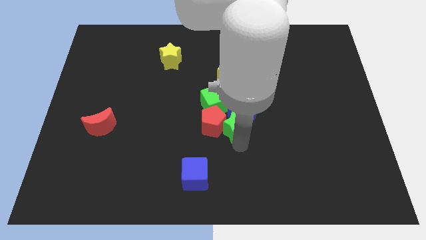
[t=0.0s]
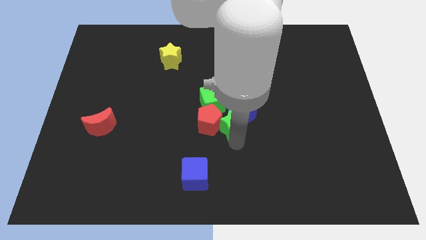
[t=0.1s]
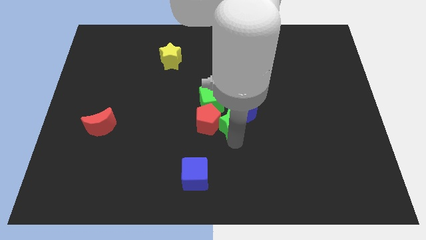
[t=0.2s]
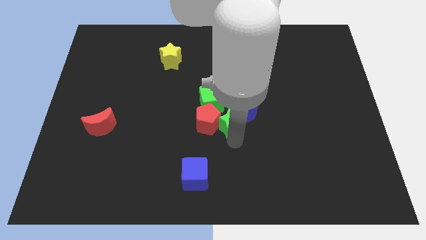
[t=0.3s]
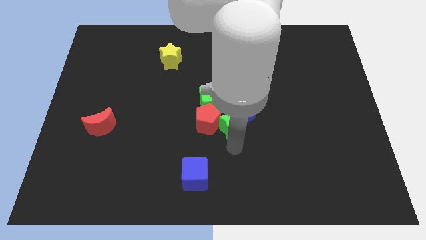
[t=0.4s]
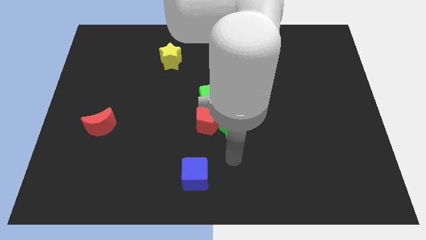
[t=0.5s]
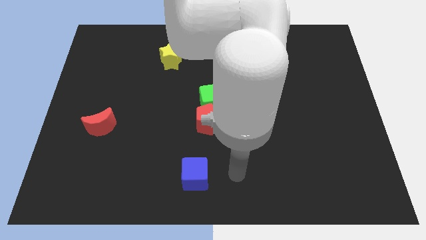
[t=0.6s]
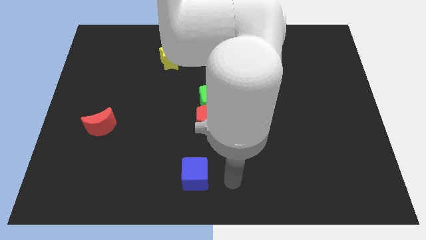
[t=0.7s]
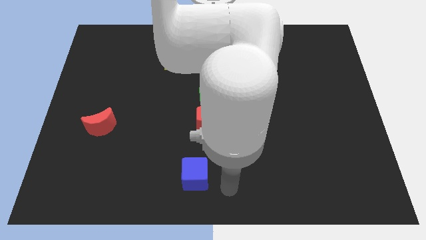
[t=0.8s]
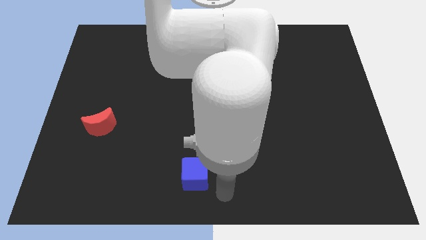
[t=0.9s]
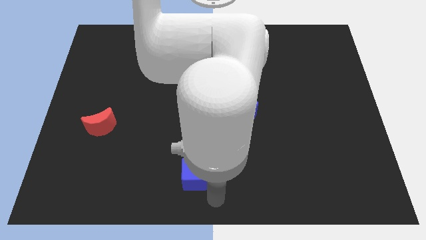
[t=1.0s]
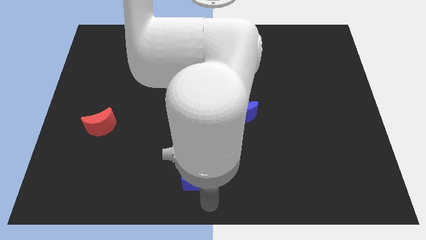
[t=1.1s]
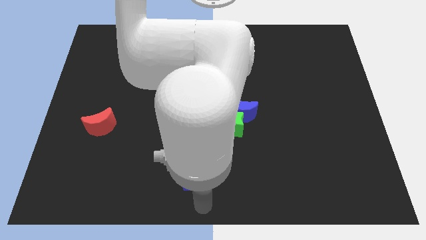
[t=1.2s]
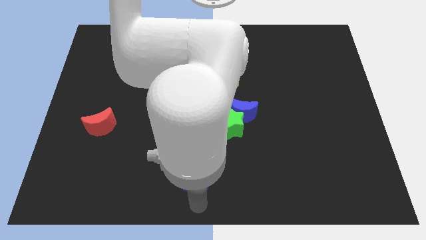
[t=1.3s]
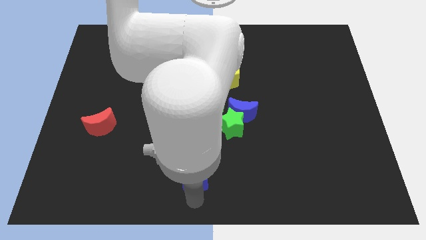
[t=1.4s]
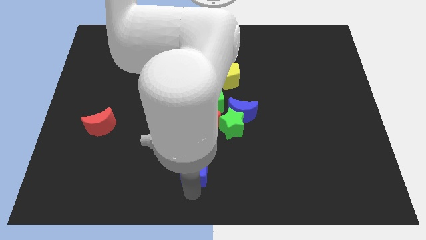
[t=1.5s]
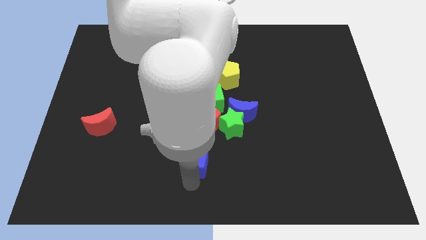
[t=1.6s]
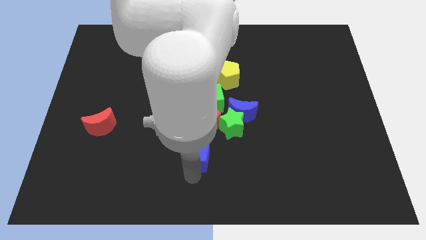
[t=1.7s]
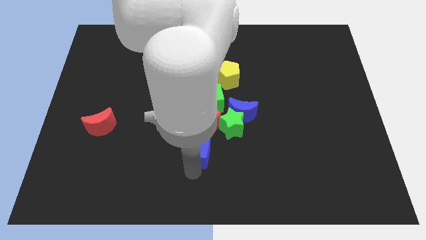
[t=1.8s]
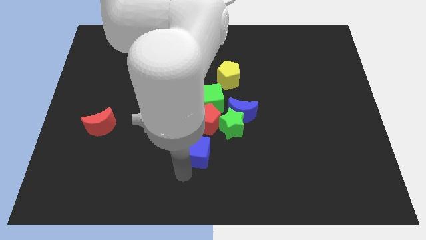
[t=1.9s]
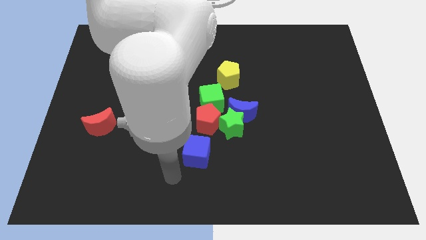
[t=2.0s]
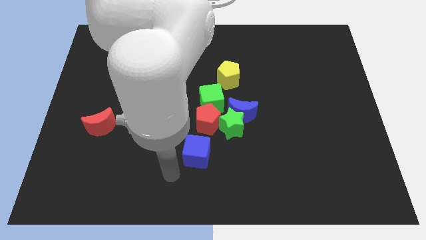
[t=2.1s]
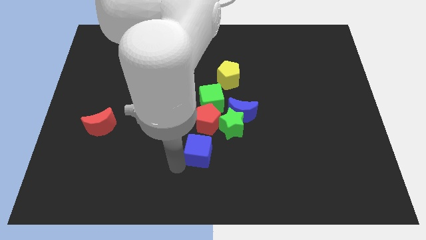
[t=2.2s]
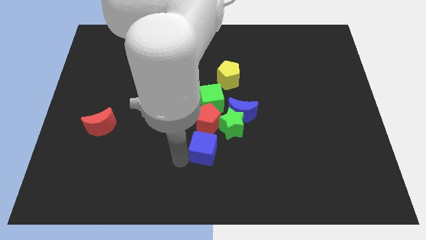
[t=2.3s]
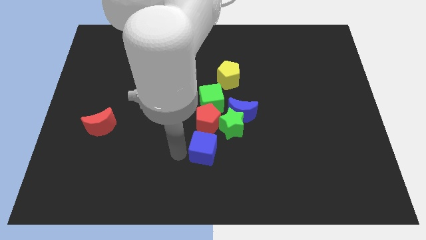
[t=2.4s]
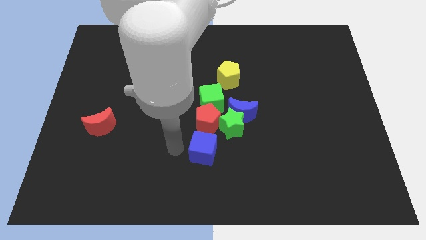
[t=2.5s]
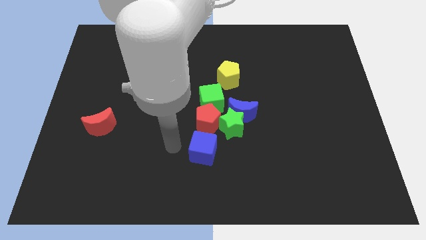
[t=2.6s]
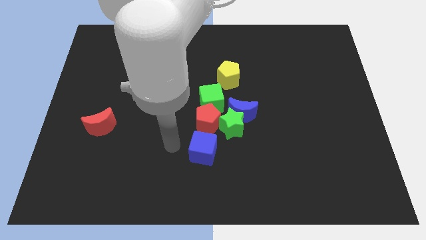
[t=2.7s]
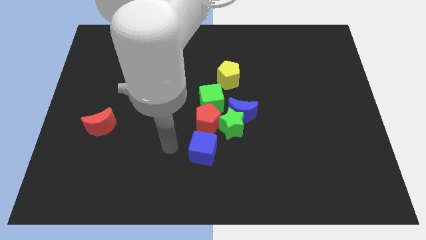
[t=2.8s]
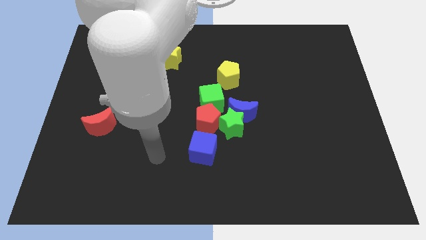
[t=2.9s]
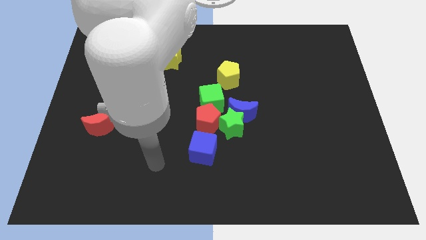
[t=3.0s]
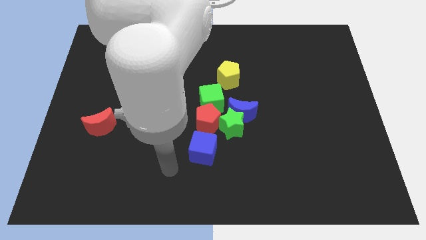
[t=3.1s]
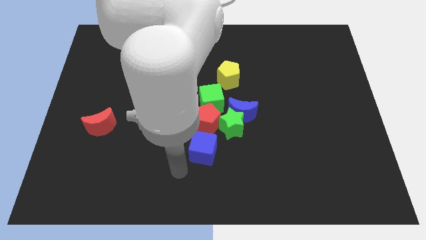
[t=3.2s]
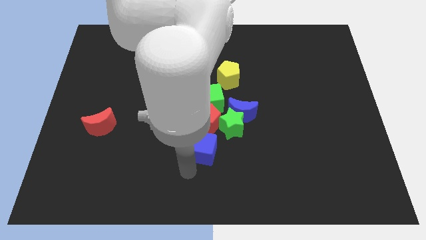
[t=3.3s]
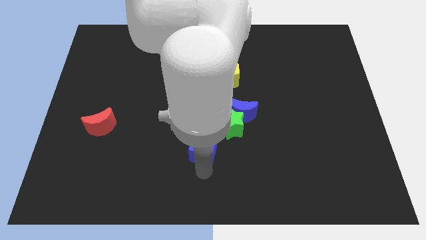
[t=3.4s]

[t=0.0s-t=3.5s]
slide the blue block towards the bottom of the red pentagon

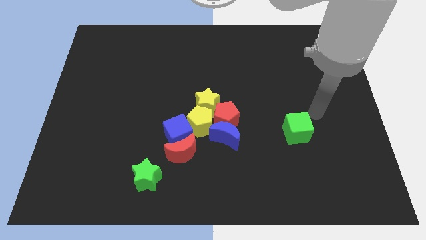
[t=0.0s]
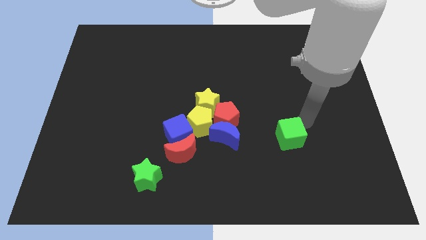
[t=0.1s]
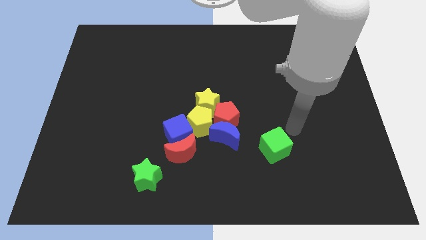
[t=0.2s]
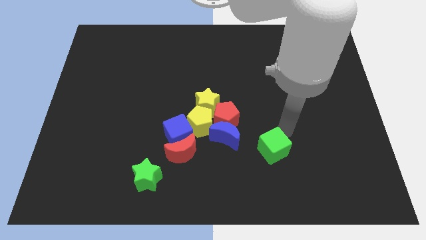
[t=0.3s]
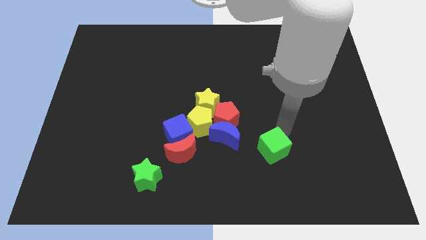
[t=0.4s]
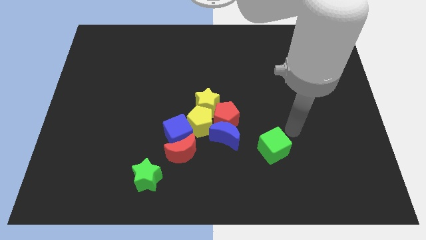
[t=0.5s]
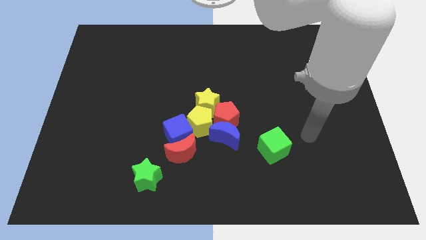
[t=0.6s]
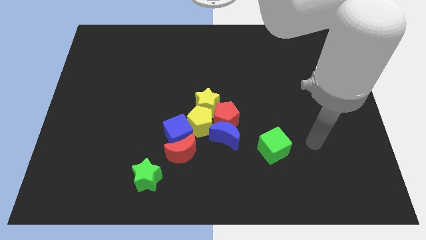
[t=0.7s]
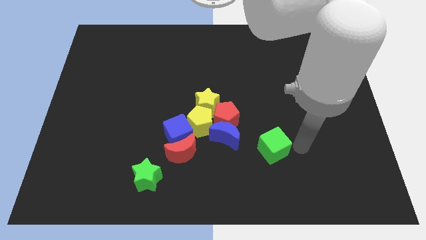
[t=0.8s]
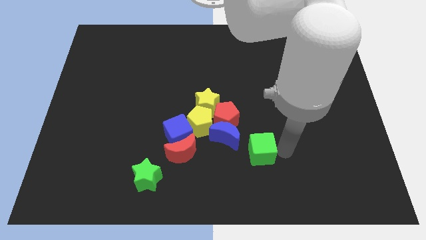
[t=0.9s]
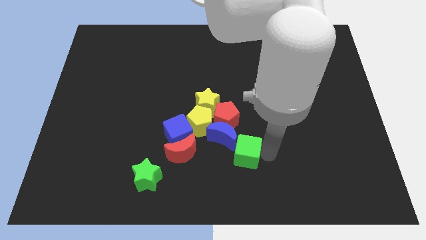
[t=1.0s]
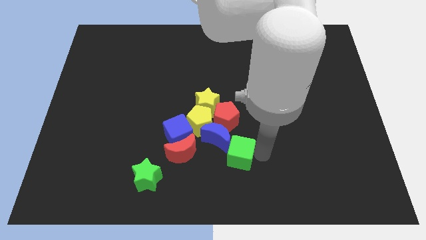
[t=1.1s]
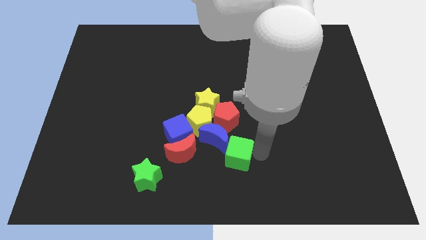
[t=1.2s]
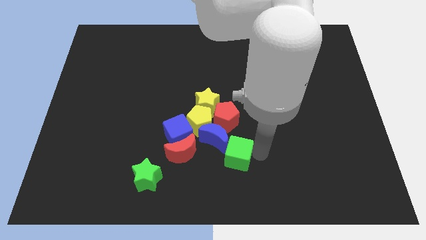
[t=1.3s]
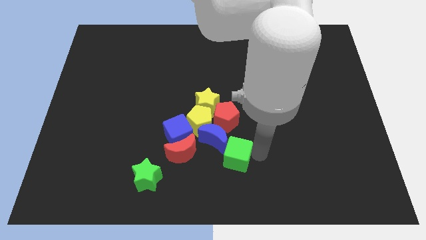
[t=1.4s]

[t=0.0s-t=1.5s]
push green cube into the blue moon

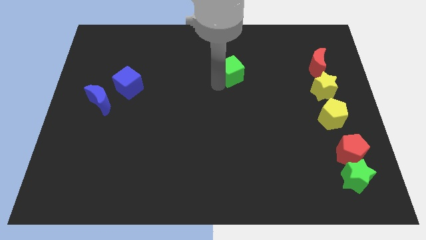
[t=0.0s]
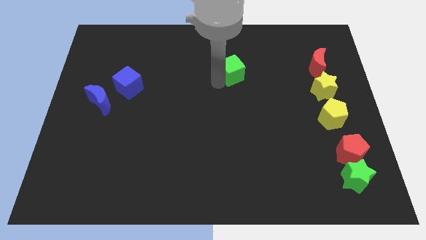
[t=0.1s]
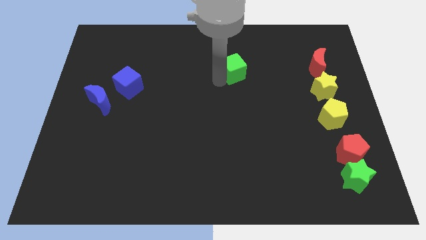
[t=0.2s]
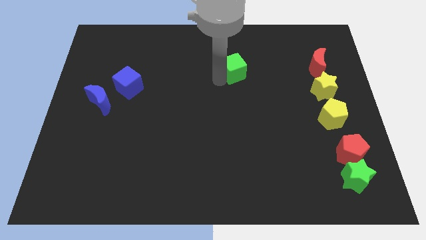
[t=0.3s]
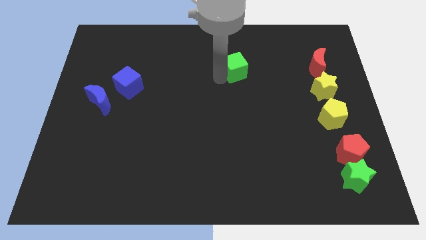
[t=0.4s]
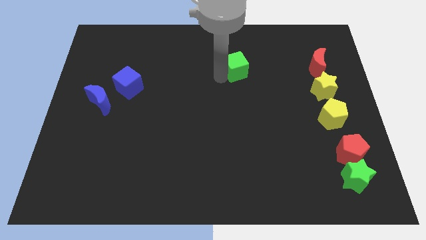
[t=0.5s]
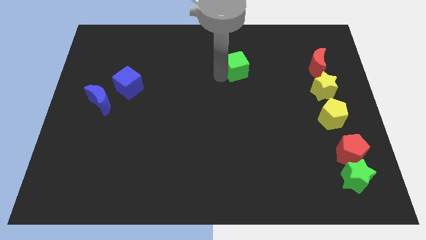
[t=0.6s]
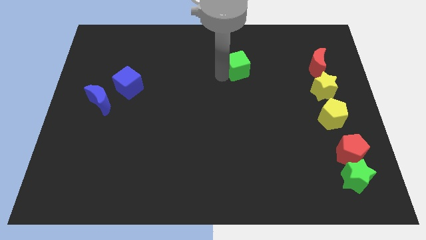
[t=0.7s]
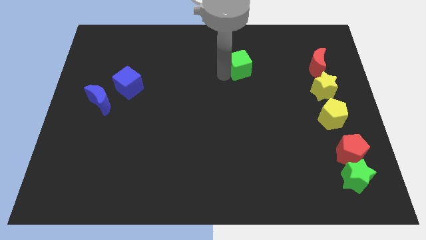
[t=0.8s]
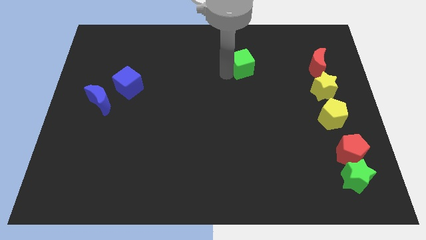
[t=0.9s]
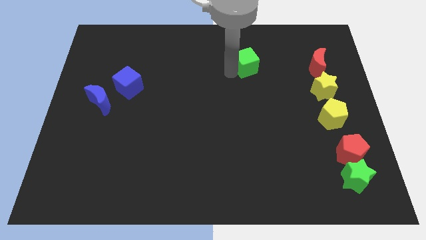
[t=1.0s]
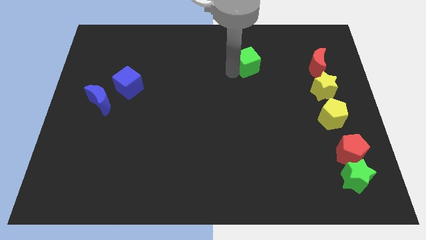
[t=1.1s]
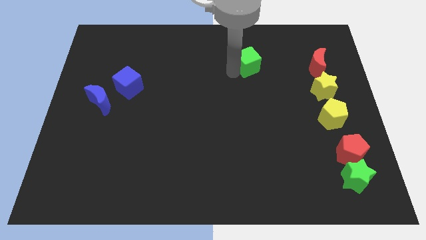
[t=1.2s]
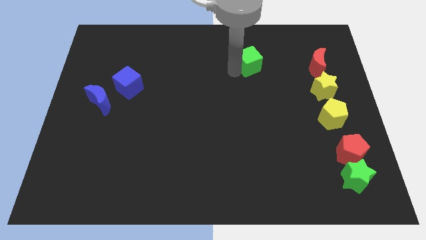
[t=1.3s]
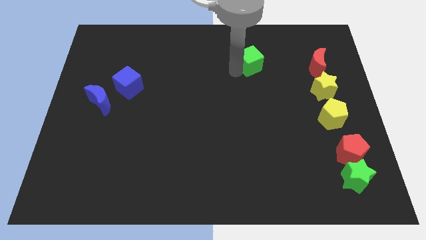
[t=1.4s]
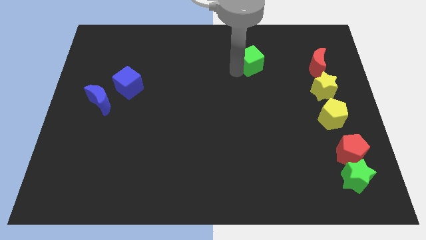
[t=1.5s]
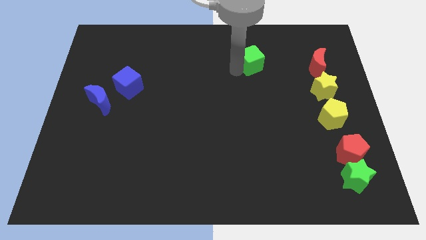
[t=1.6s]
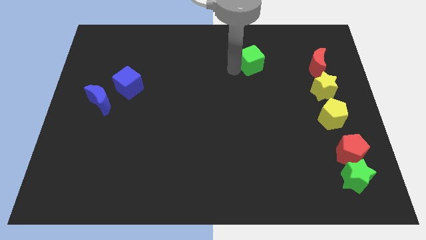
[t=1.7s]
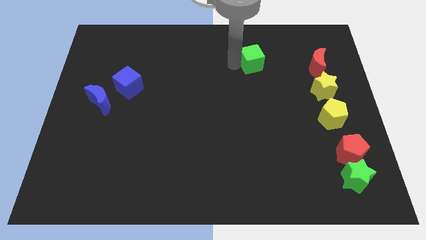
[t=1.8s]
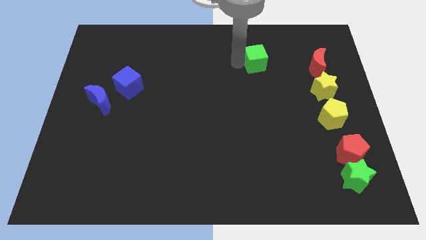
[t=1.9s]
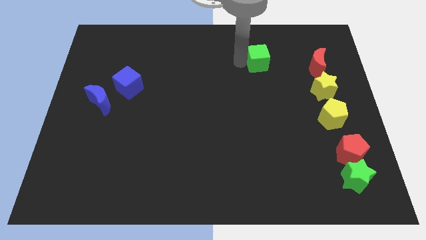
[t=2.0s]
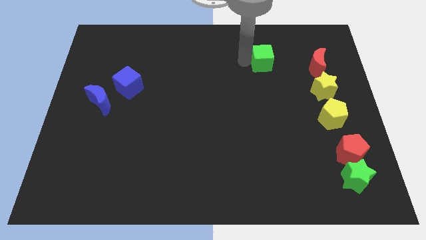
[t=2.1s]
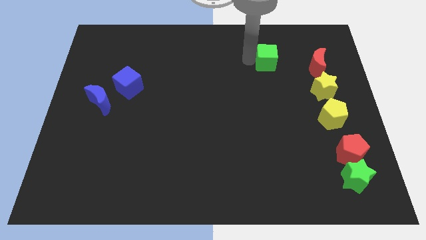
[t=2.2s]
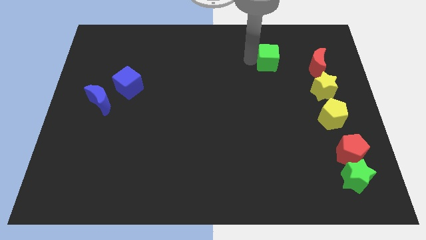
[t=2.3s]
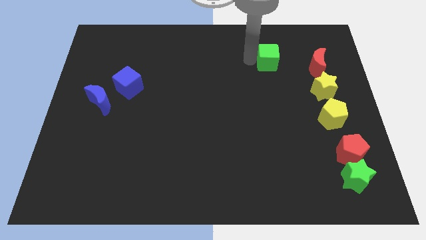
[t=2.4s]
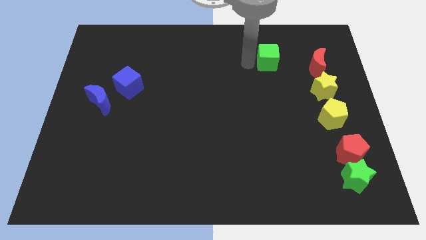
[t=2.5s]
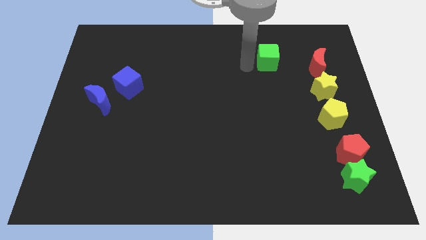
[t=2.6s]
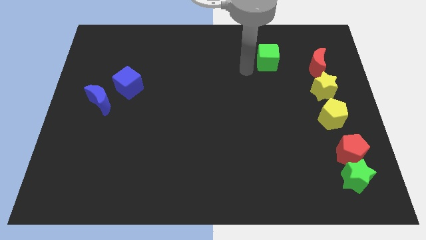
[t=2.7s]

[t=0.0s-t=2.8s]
push the green cube to the left of the red crescent

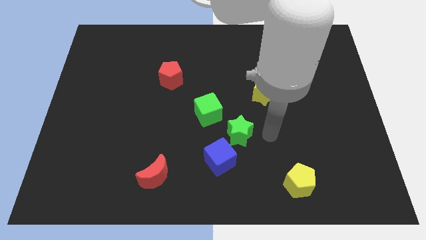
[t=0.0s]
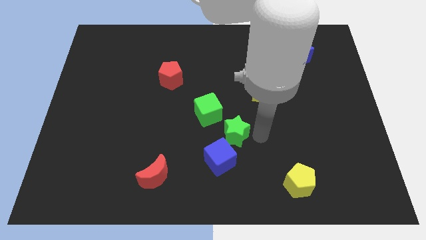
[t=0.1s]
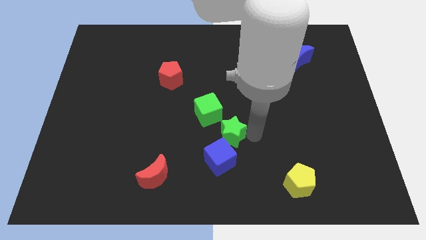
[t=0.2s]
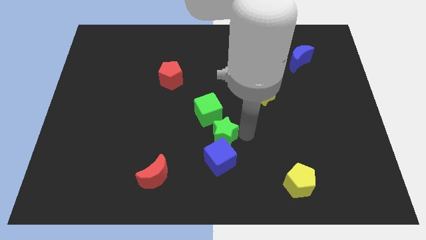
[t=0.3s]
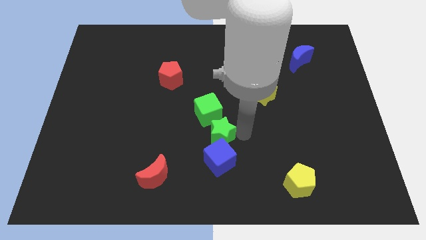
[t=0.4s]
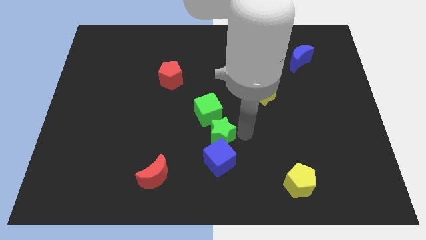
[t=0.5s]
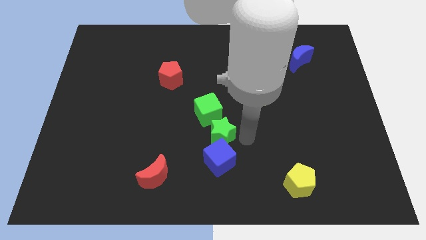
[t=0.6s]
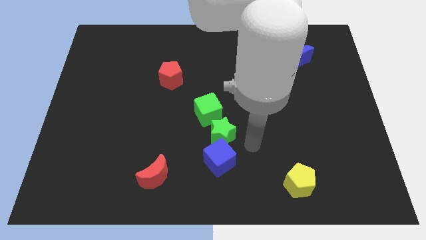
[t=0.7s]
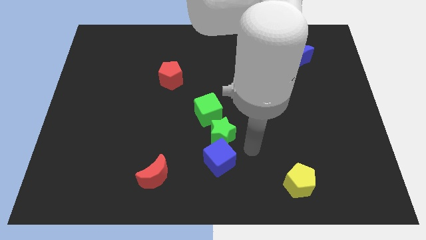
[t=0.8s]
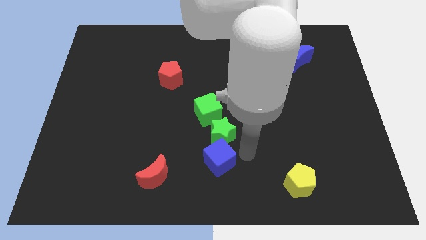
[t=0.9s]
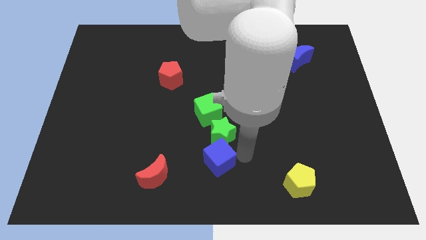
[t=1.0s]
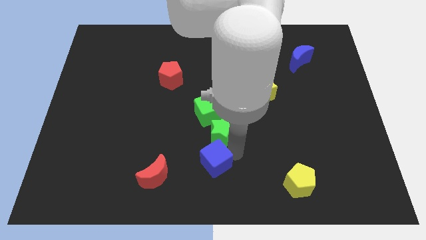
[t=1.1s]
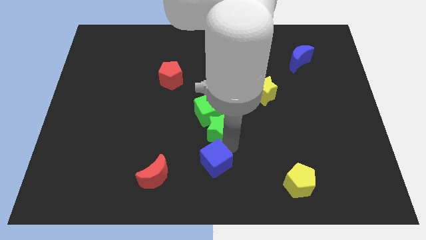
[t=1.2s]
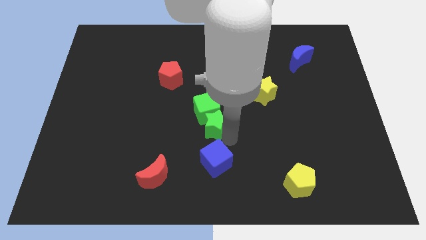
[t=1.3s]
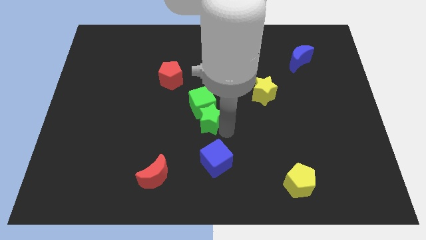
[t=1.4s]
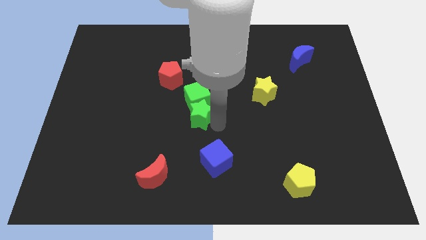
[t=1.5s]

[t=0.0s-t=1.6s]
push the green star into the green cube
